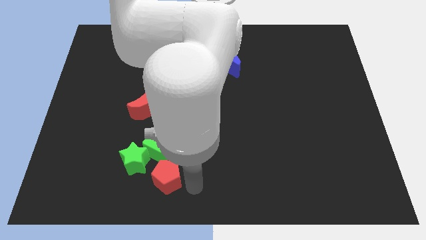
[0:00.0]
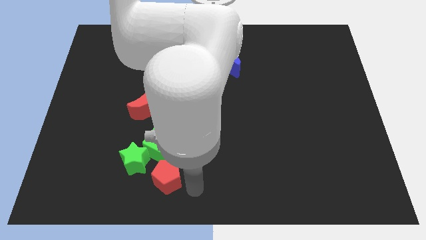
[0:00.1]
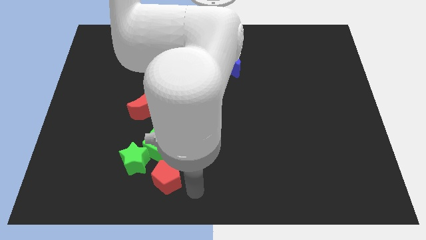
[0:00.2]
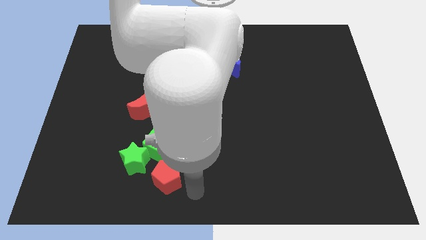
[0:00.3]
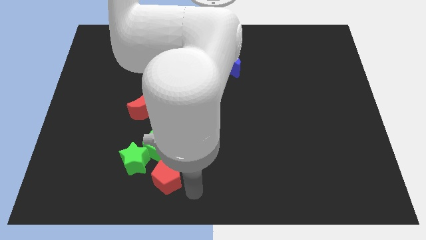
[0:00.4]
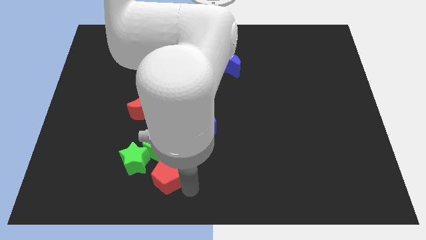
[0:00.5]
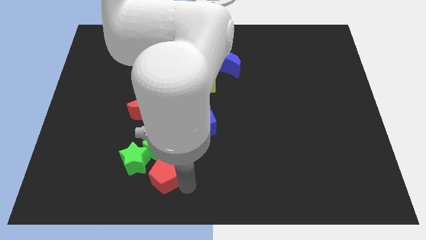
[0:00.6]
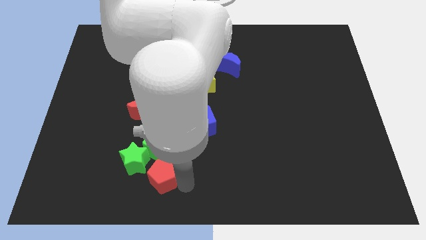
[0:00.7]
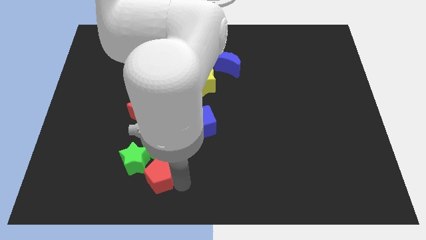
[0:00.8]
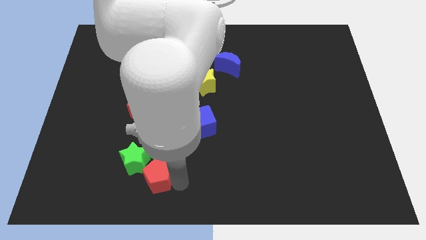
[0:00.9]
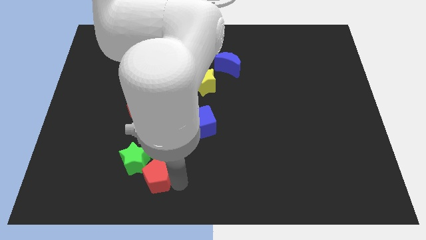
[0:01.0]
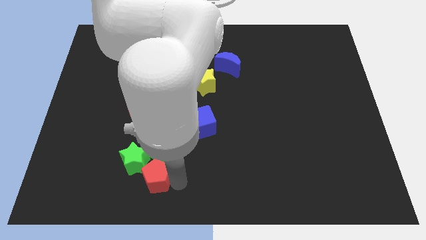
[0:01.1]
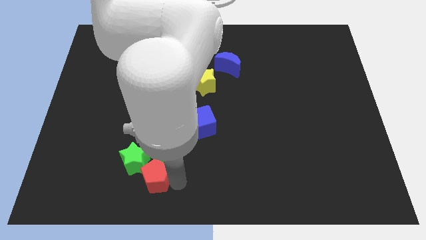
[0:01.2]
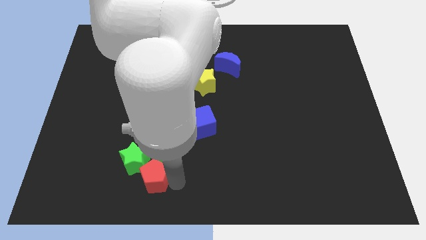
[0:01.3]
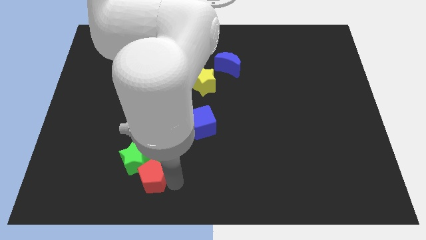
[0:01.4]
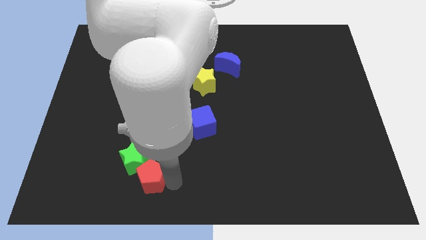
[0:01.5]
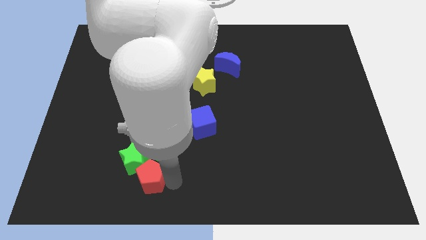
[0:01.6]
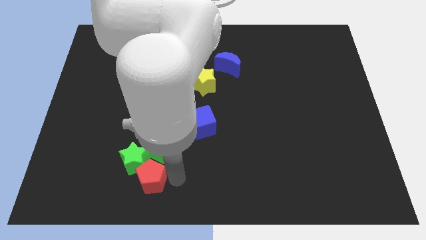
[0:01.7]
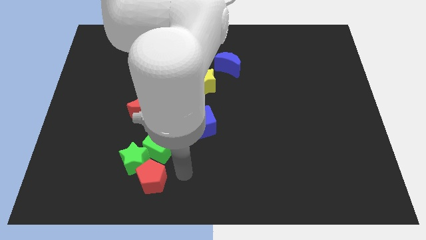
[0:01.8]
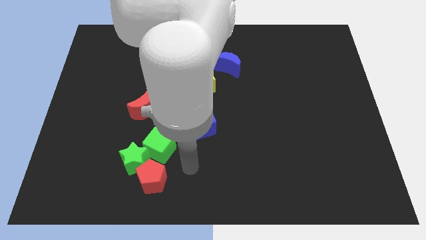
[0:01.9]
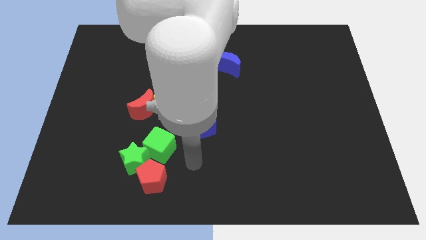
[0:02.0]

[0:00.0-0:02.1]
drag the red pentagon to bottom right of green star

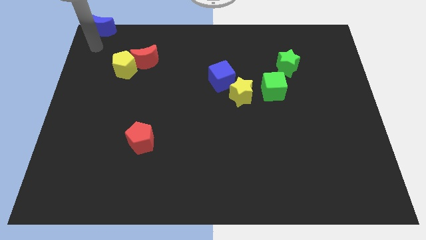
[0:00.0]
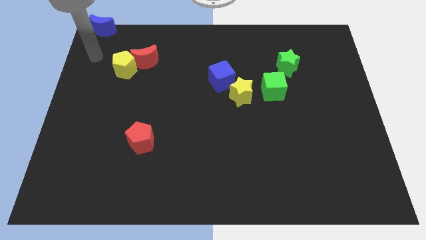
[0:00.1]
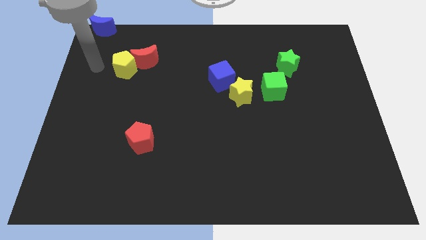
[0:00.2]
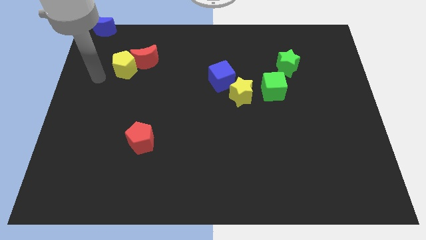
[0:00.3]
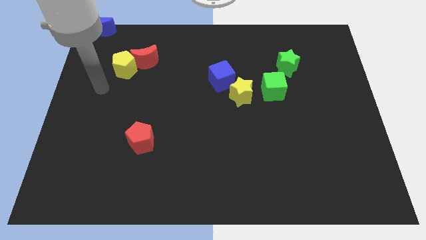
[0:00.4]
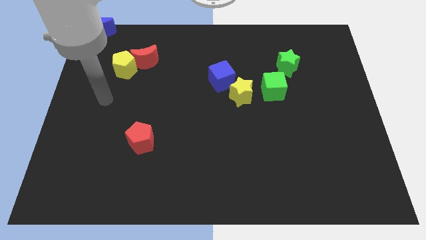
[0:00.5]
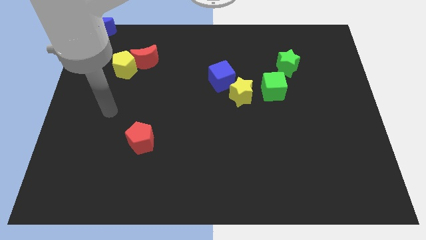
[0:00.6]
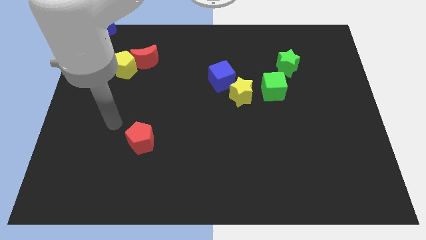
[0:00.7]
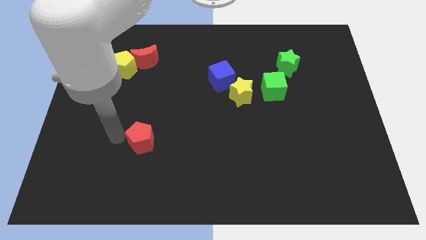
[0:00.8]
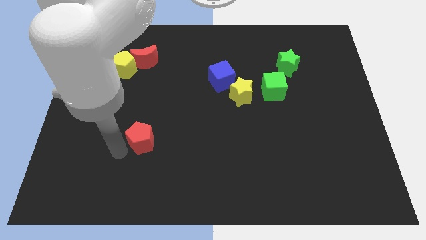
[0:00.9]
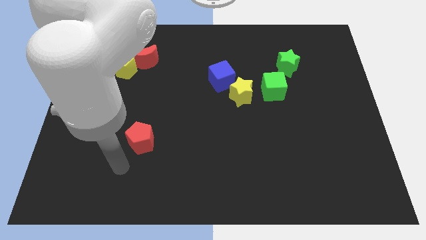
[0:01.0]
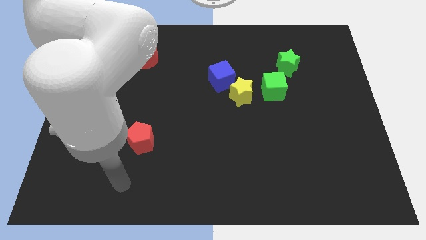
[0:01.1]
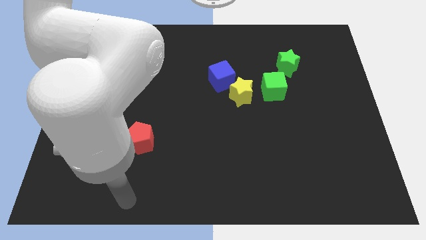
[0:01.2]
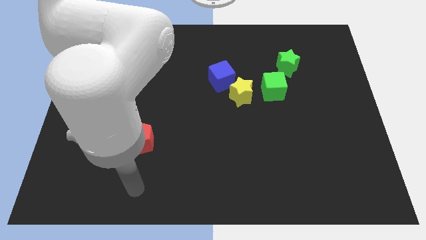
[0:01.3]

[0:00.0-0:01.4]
move your hand below the red pentagon

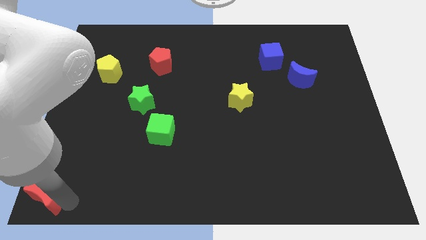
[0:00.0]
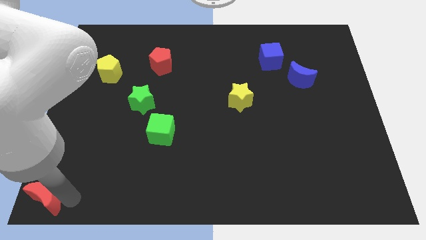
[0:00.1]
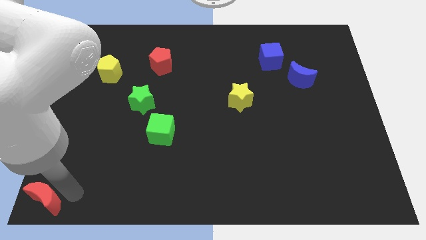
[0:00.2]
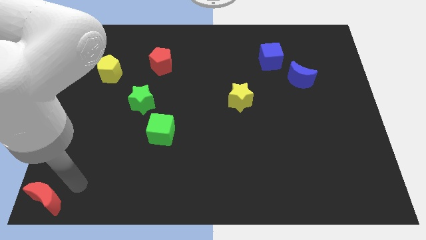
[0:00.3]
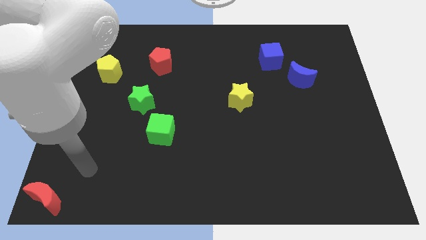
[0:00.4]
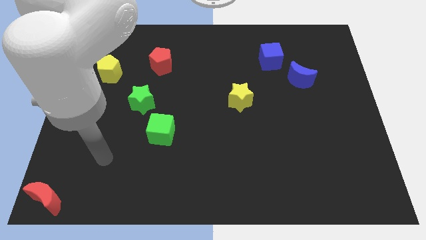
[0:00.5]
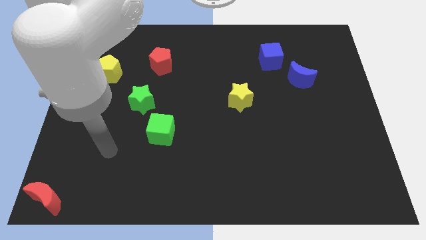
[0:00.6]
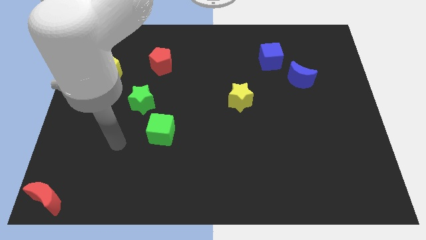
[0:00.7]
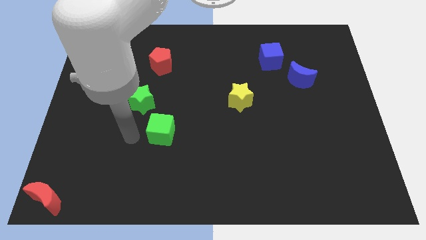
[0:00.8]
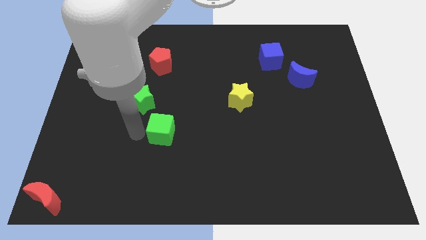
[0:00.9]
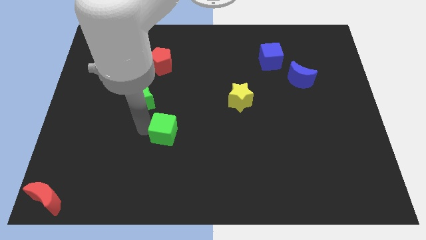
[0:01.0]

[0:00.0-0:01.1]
move the arm towards the green cube

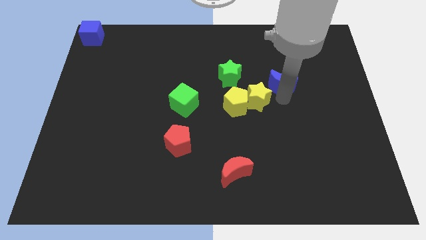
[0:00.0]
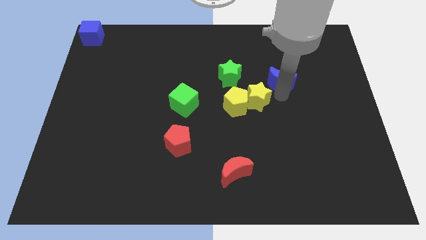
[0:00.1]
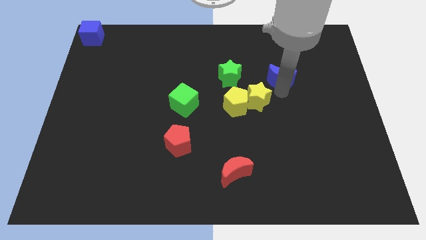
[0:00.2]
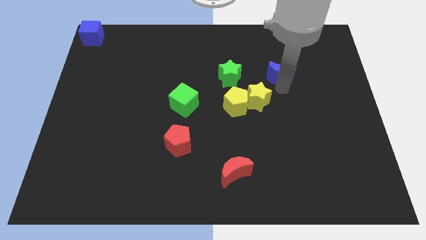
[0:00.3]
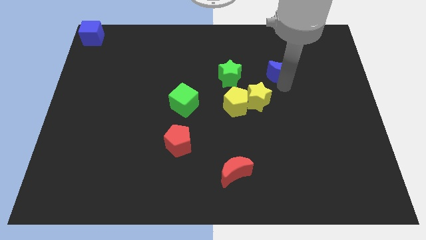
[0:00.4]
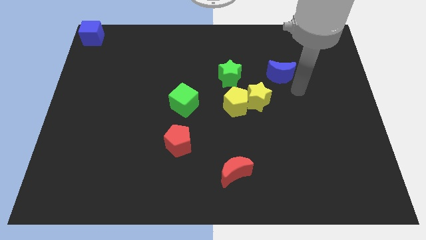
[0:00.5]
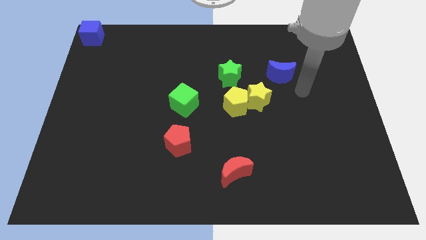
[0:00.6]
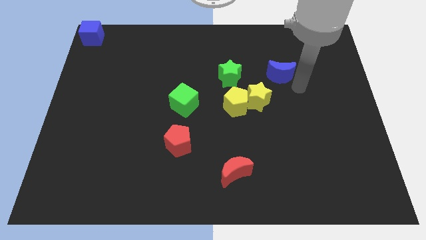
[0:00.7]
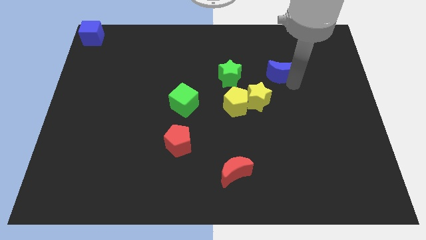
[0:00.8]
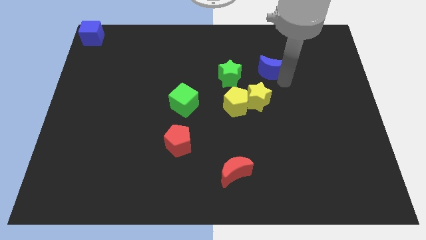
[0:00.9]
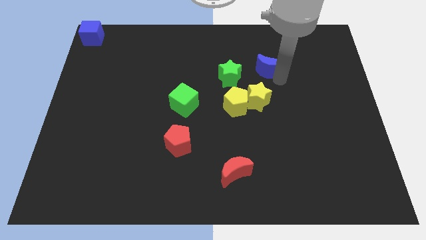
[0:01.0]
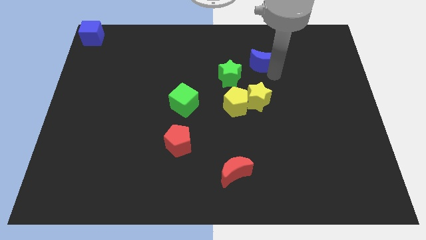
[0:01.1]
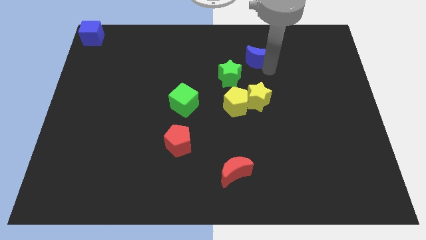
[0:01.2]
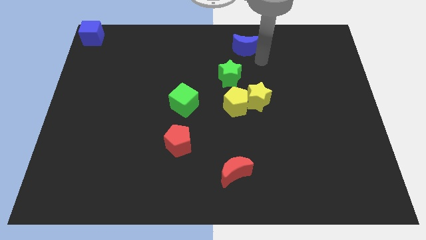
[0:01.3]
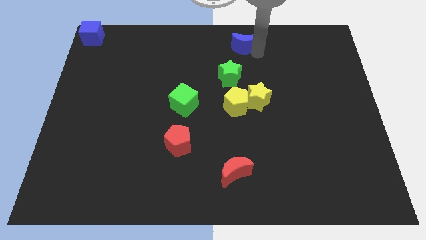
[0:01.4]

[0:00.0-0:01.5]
separate the blue crescent from yellow star

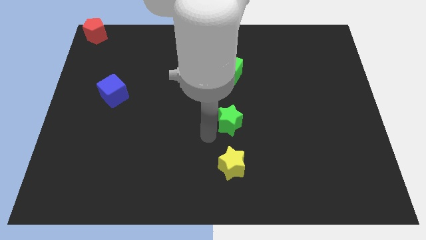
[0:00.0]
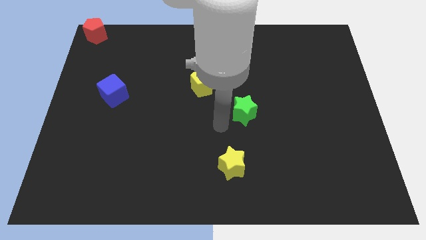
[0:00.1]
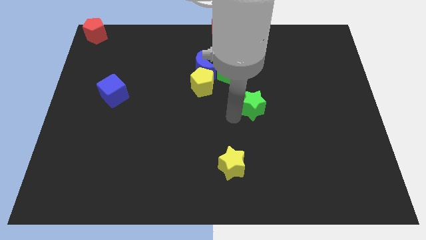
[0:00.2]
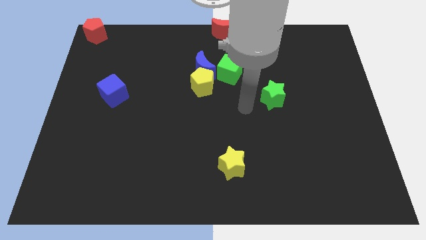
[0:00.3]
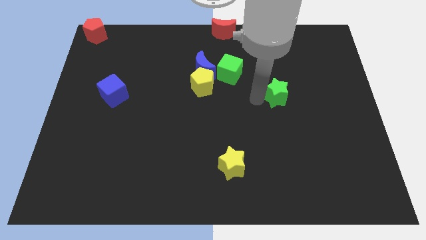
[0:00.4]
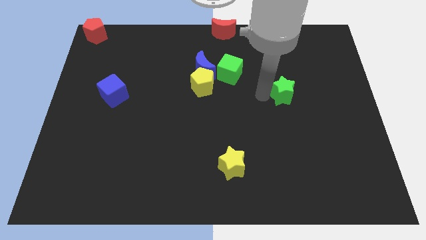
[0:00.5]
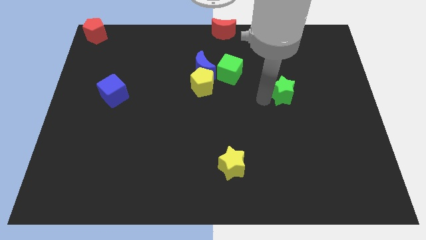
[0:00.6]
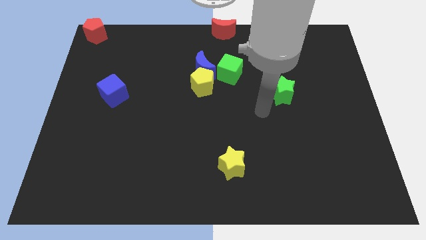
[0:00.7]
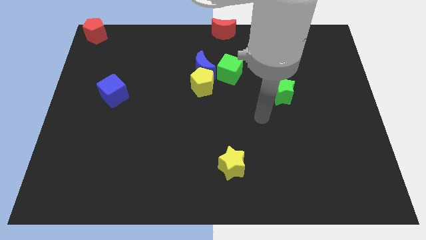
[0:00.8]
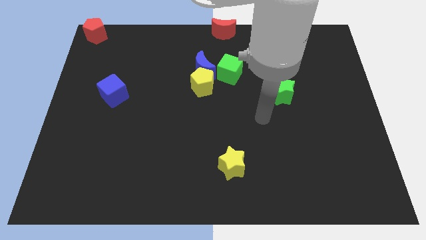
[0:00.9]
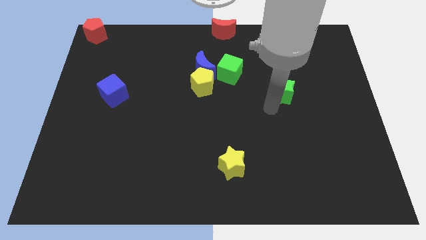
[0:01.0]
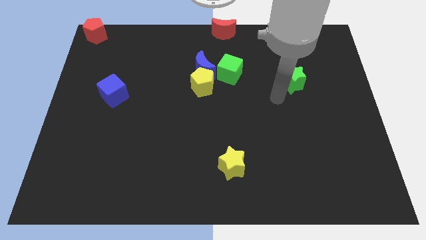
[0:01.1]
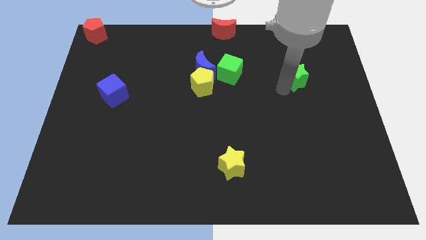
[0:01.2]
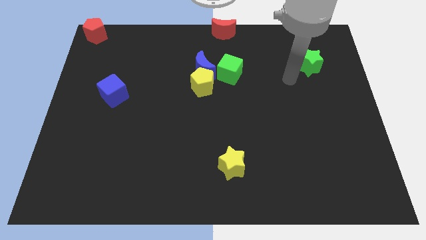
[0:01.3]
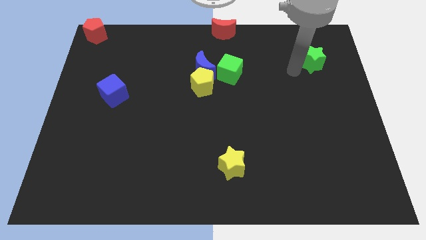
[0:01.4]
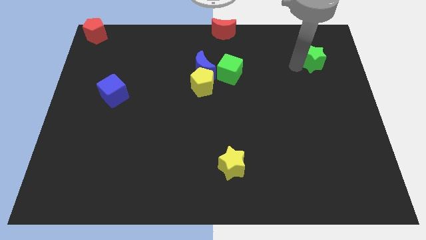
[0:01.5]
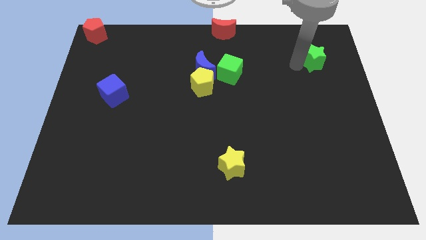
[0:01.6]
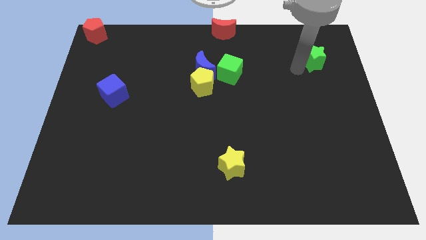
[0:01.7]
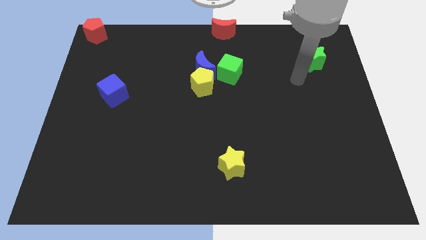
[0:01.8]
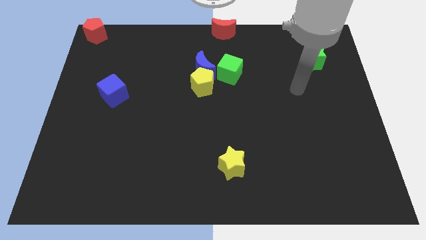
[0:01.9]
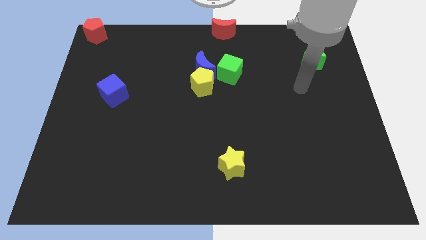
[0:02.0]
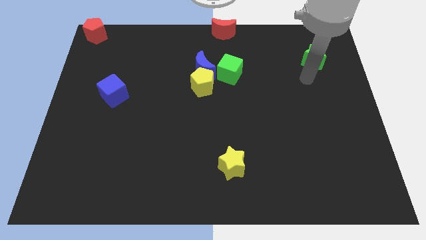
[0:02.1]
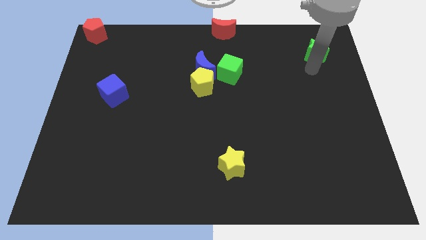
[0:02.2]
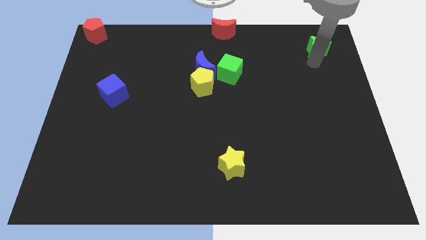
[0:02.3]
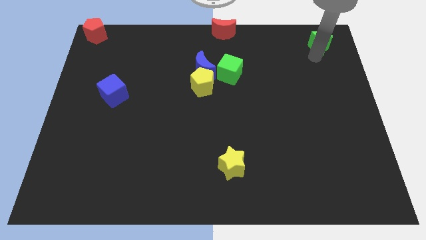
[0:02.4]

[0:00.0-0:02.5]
move the green cube top right to the board

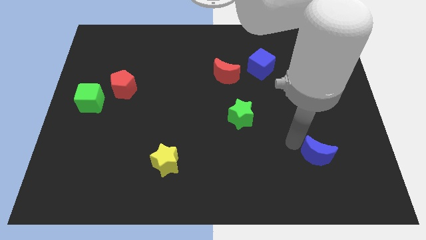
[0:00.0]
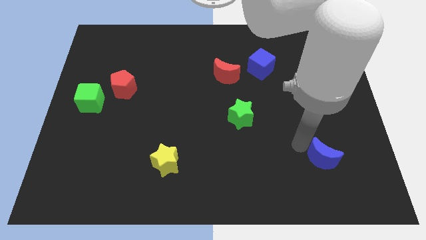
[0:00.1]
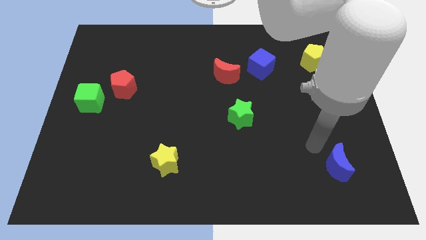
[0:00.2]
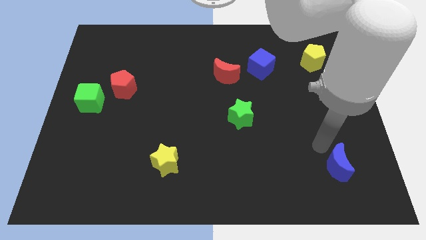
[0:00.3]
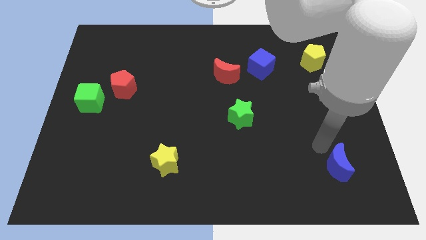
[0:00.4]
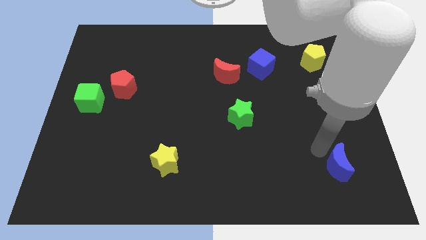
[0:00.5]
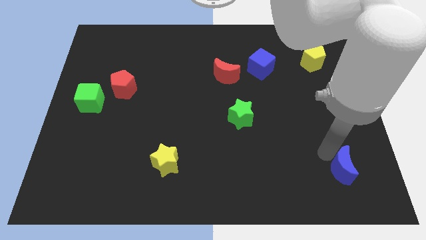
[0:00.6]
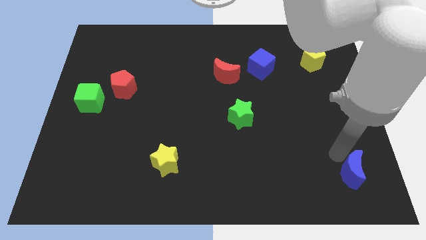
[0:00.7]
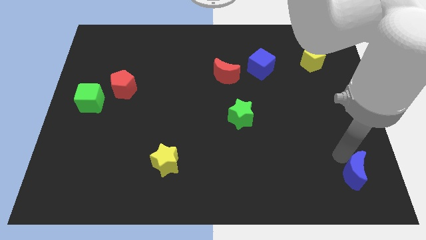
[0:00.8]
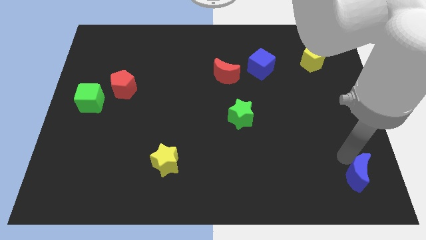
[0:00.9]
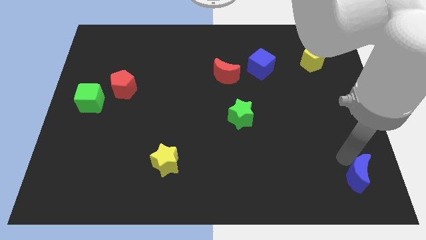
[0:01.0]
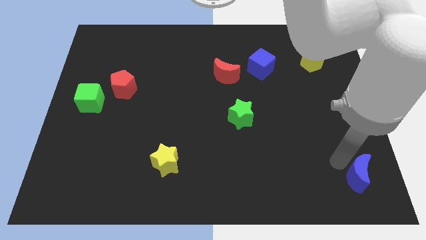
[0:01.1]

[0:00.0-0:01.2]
move the blue crescent to the bottom of the board
